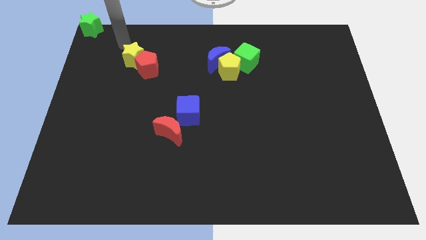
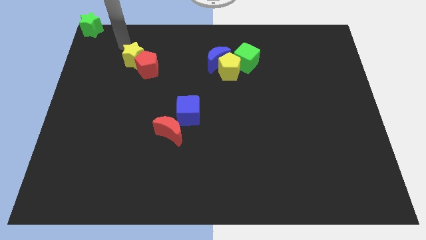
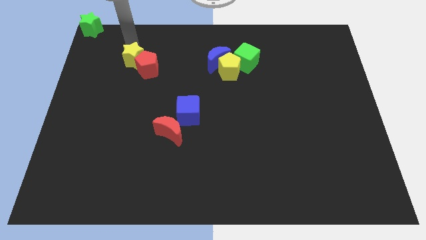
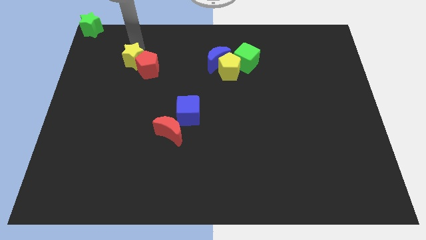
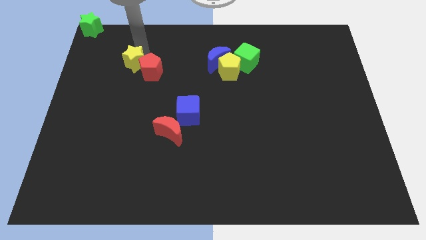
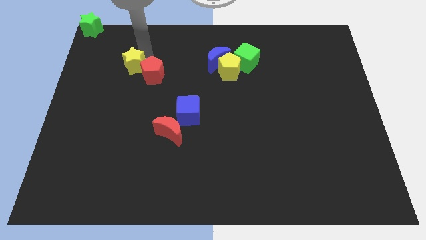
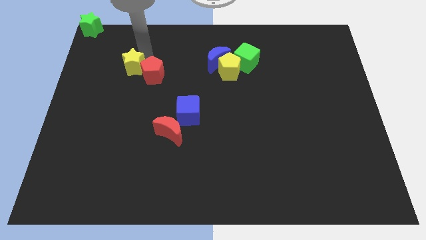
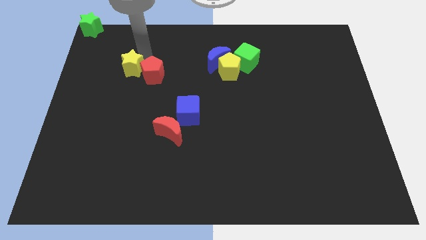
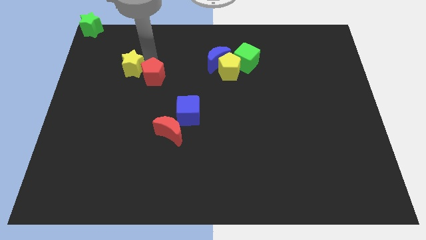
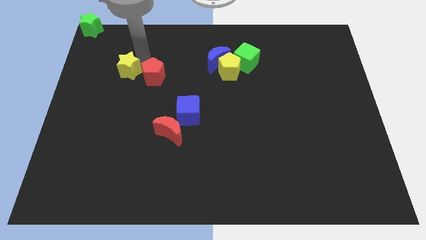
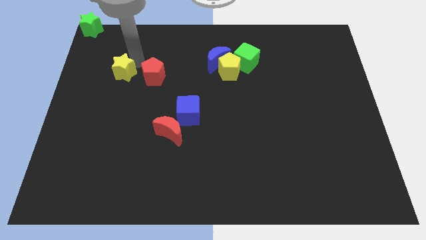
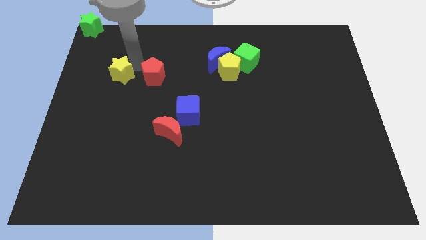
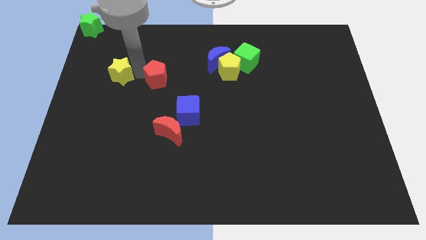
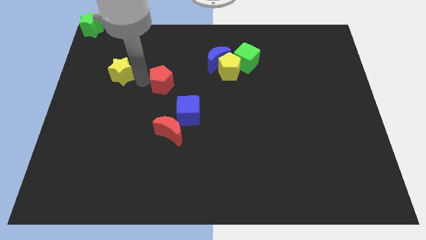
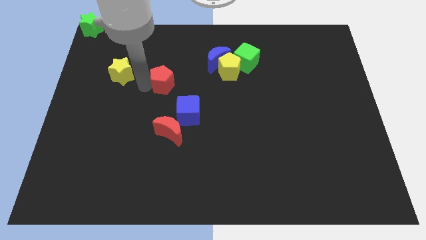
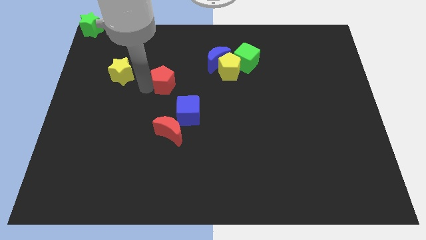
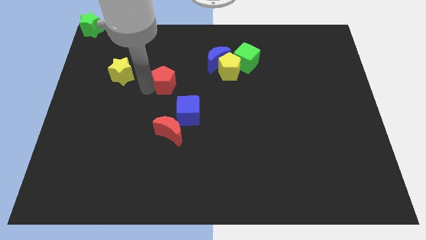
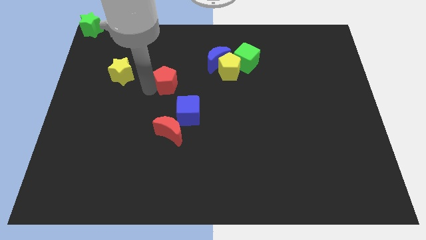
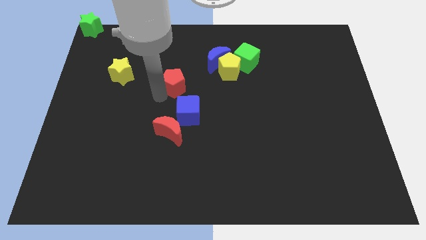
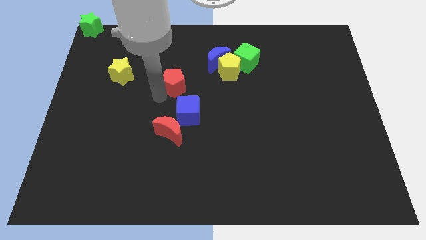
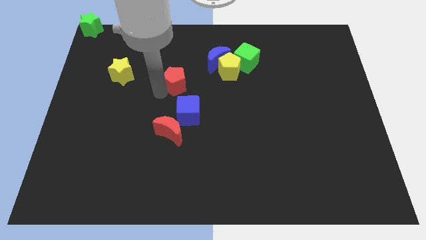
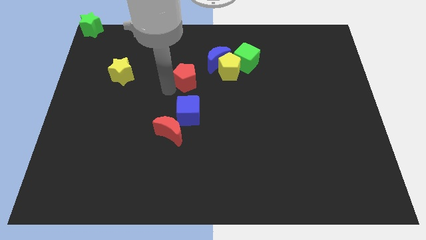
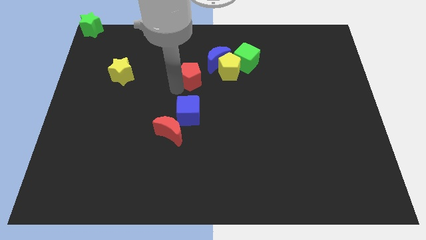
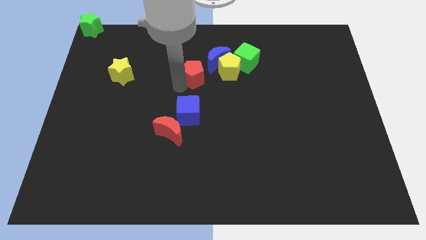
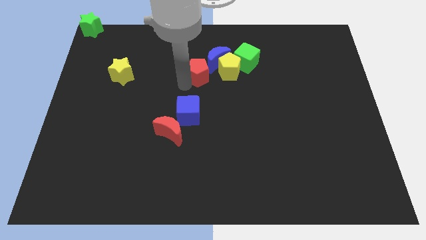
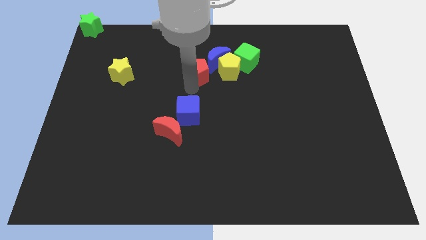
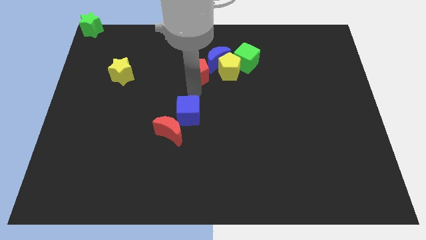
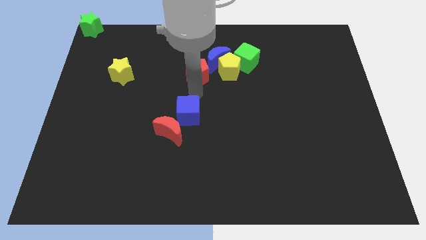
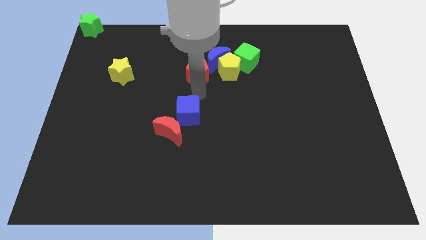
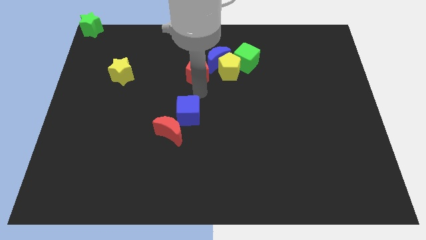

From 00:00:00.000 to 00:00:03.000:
separate the yellow star and red pentagon

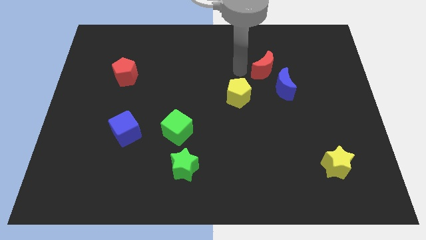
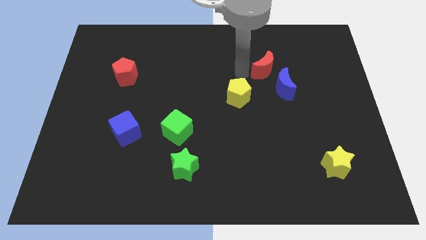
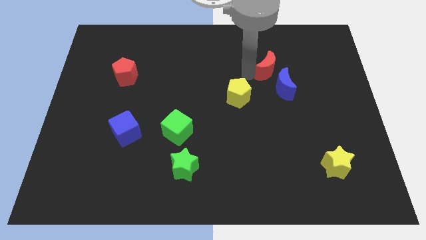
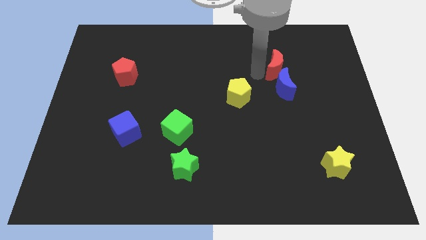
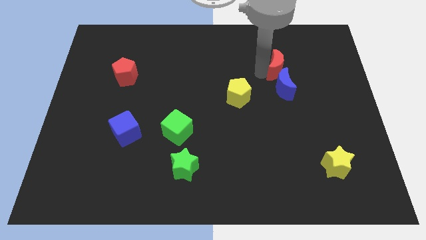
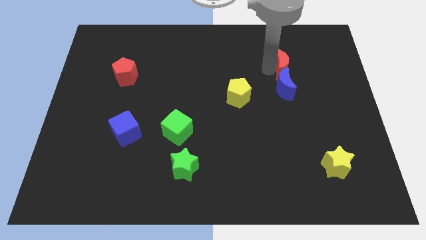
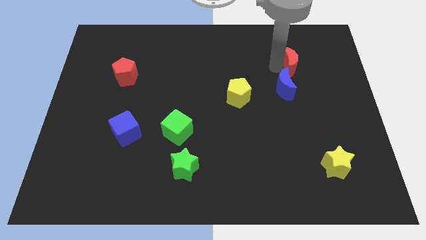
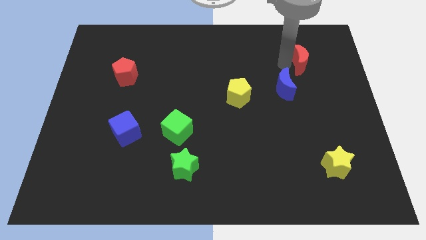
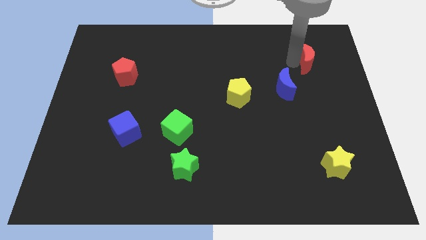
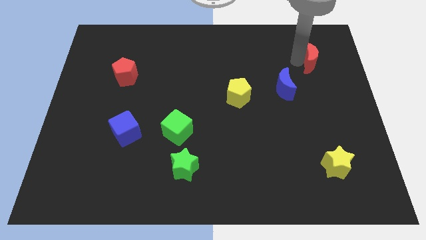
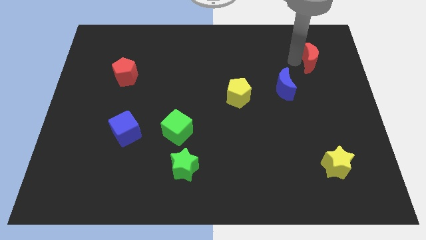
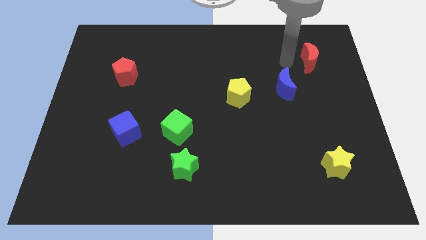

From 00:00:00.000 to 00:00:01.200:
move the red crescent to the top right of the blue crescent

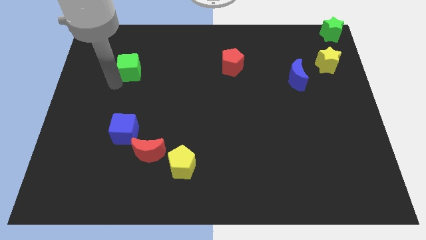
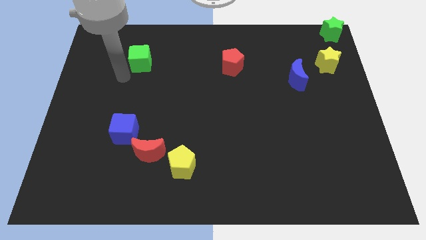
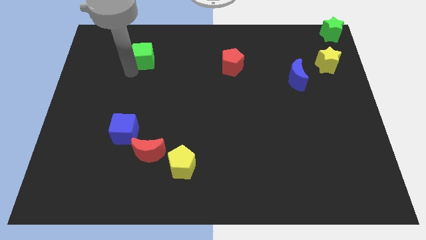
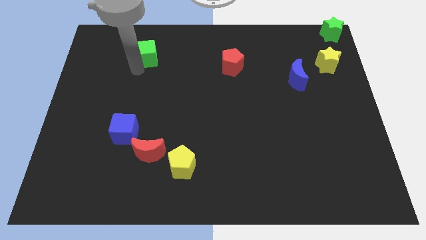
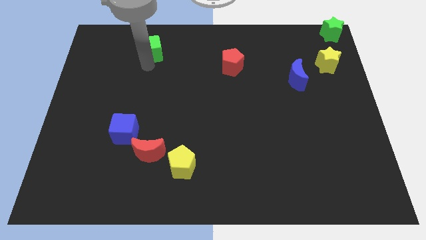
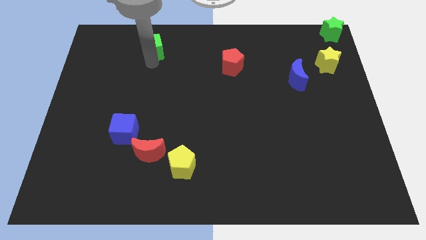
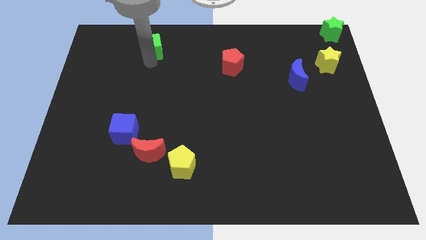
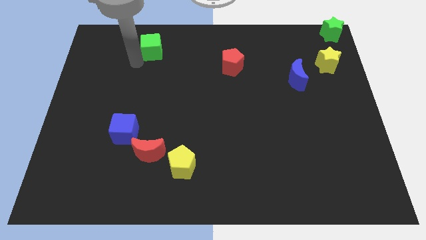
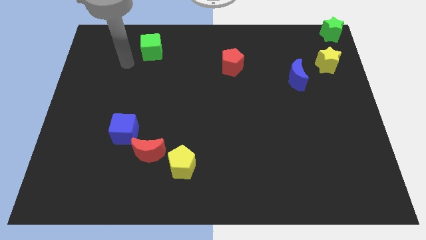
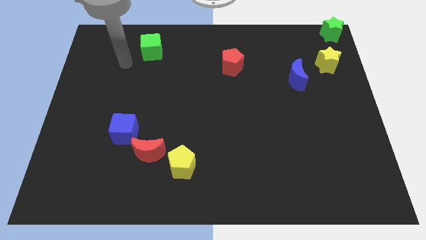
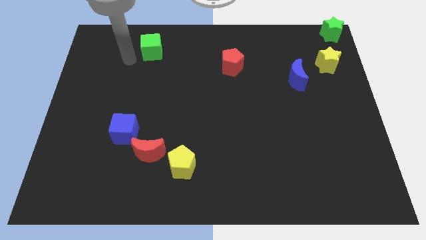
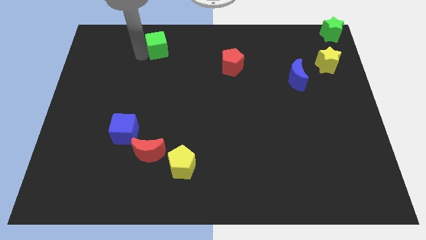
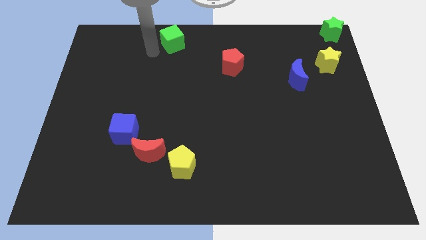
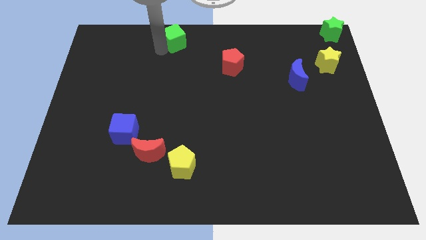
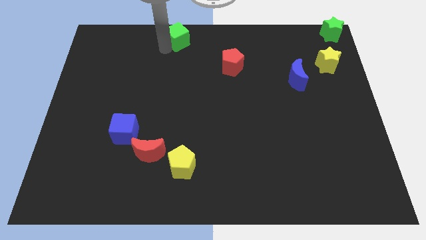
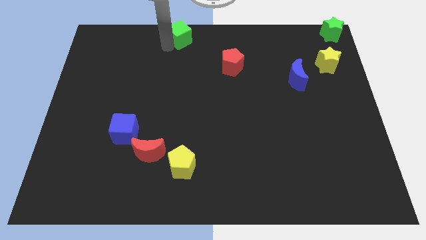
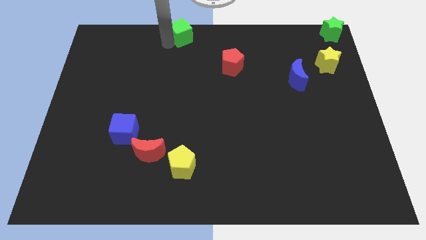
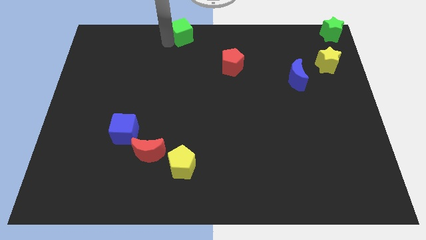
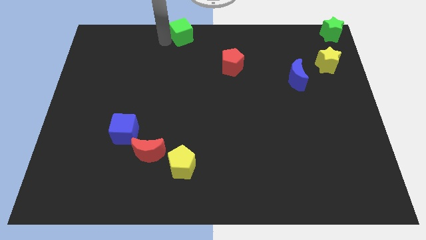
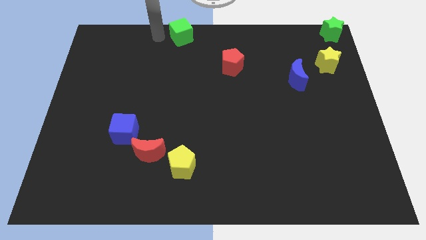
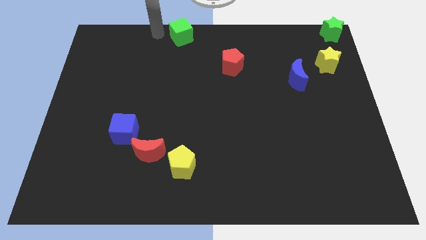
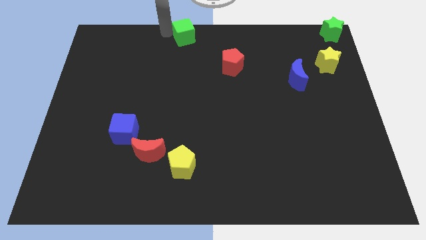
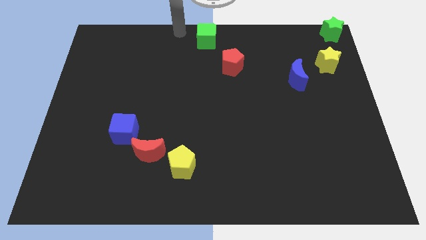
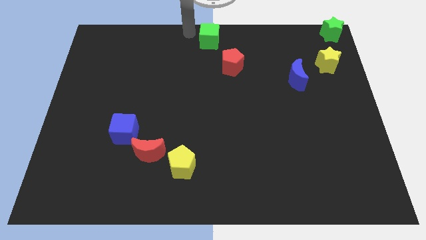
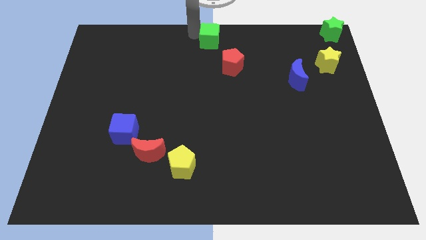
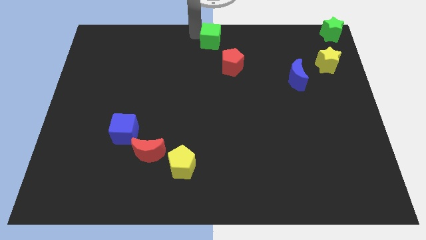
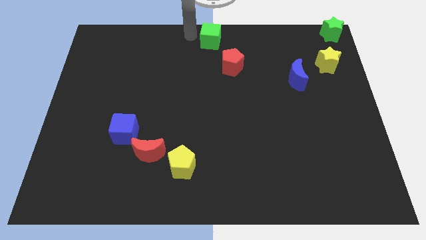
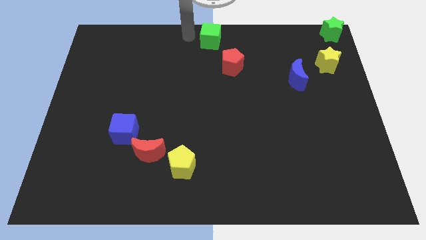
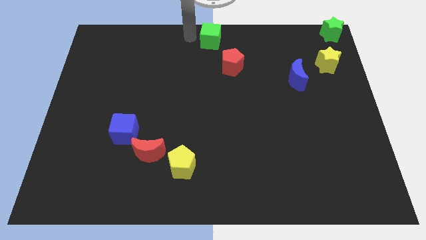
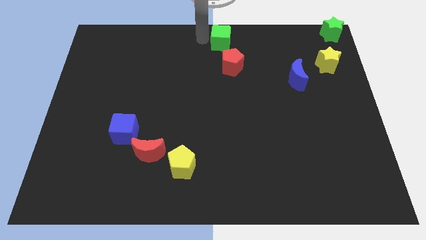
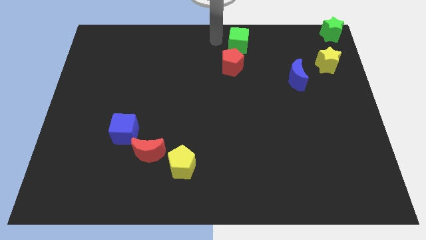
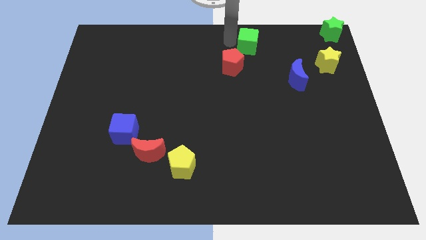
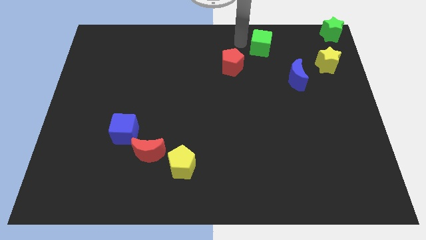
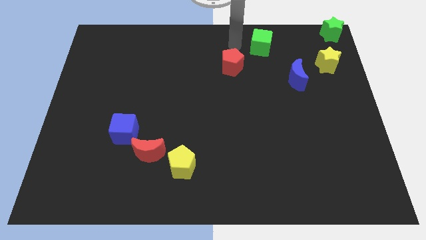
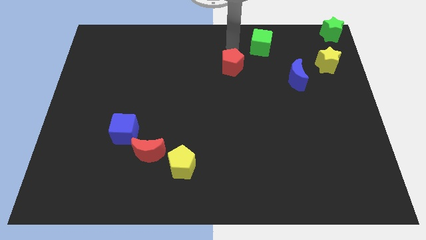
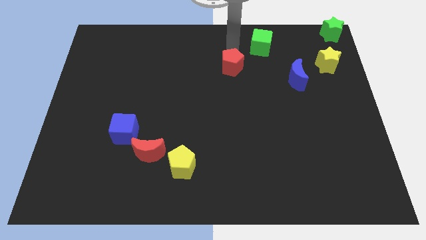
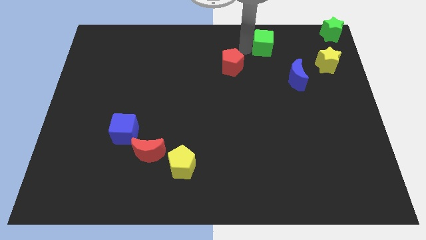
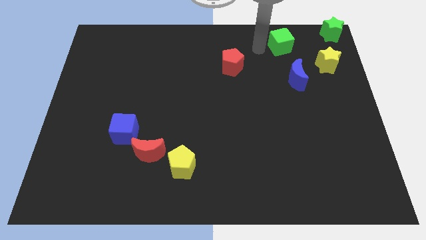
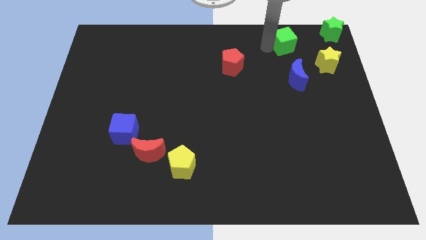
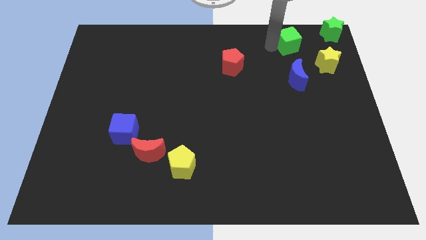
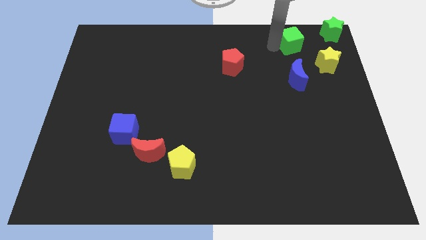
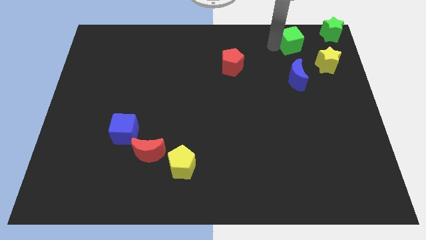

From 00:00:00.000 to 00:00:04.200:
put the green cube above the blue crescent

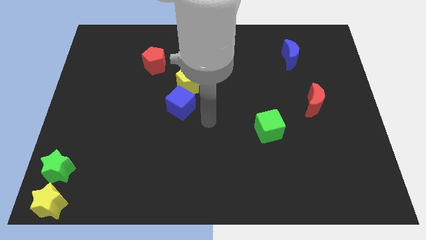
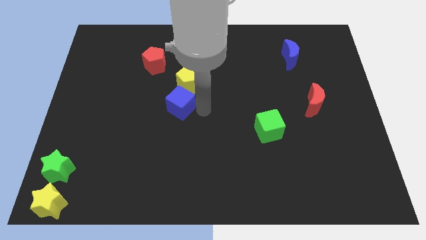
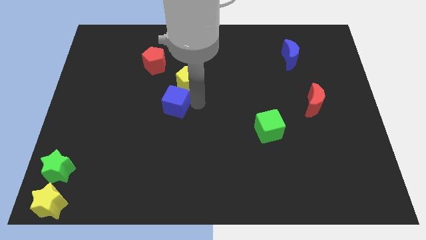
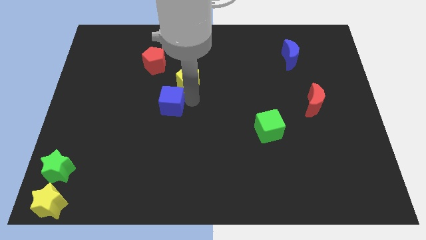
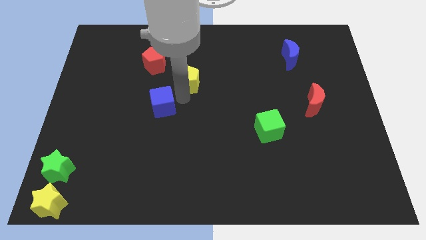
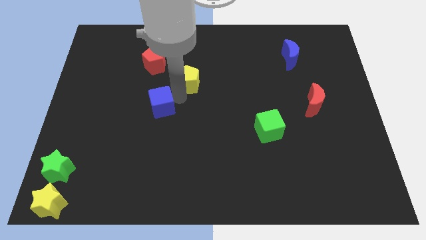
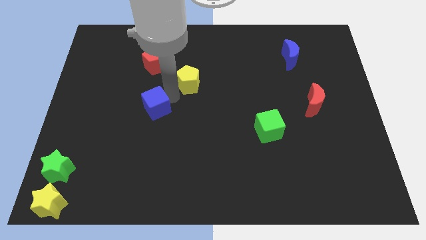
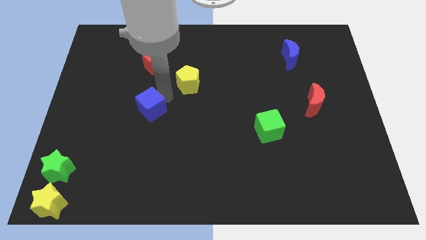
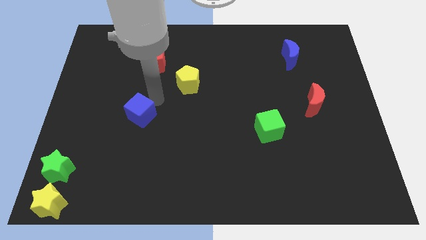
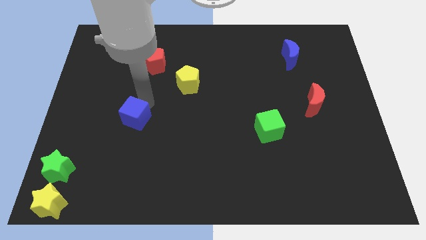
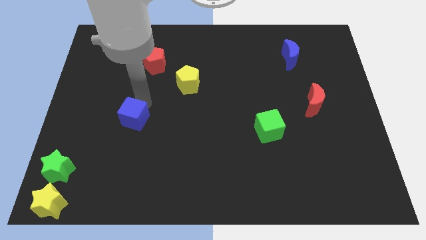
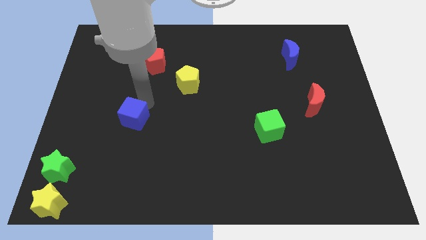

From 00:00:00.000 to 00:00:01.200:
separate blue cube from yellow pentagon
